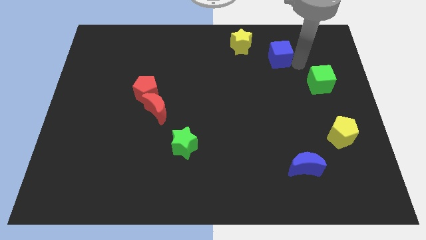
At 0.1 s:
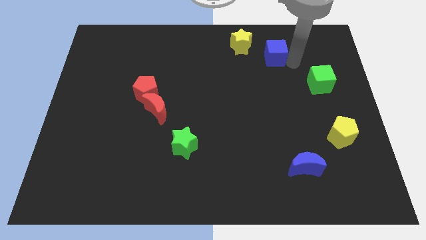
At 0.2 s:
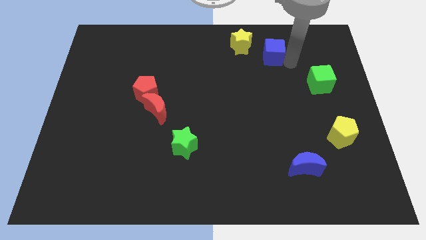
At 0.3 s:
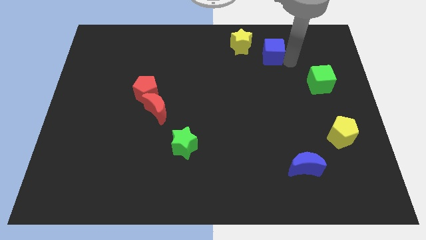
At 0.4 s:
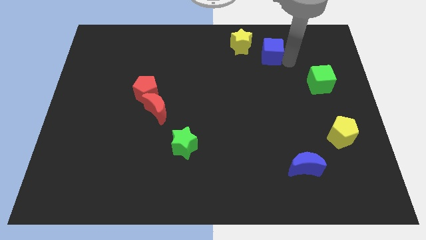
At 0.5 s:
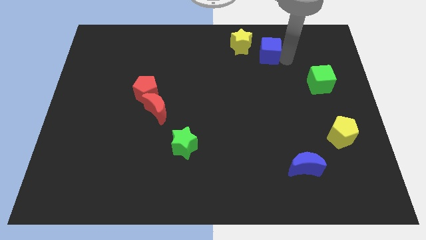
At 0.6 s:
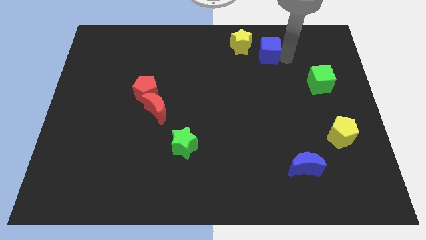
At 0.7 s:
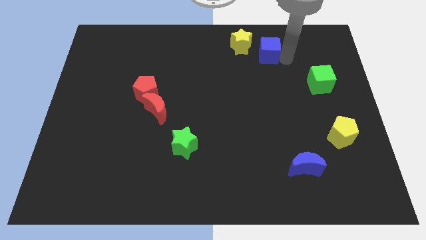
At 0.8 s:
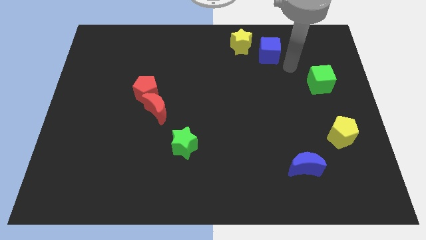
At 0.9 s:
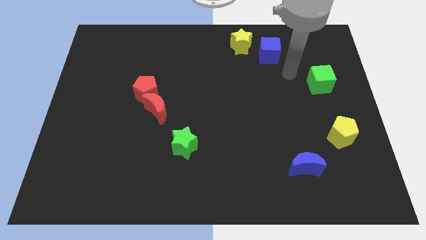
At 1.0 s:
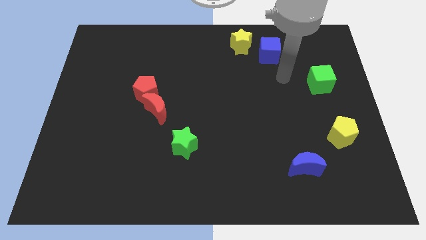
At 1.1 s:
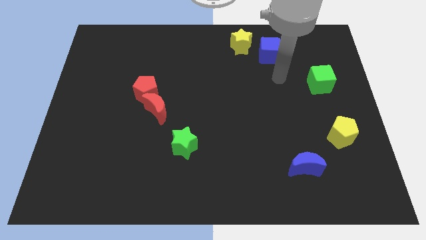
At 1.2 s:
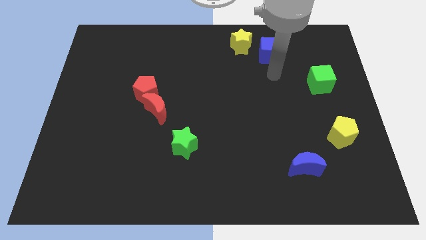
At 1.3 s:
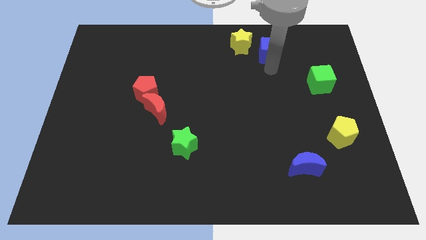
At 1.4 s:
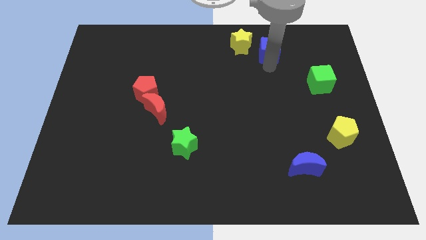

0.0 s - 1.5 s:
move the blue cube slightly to the left

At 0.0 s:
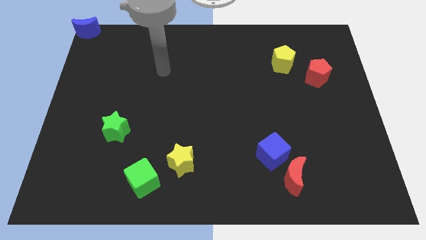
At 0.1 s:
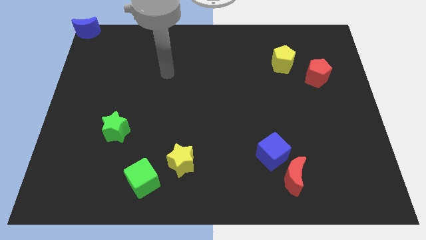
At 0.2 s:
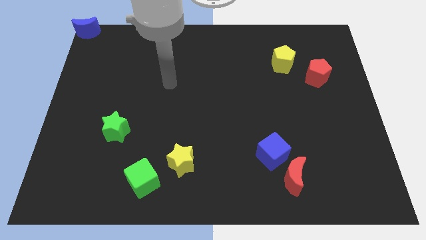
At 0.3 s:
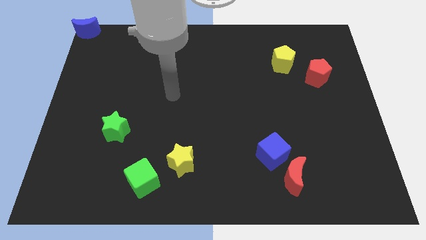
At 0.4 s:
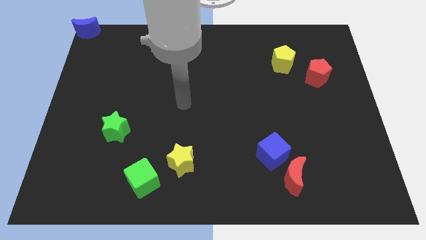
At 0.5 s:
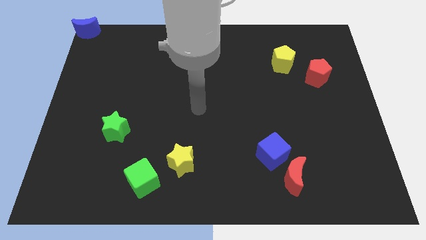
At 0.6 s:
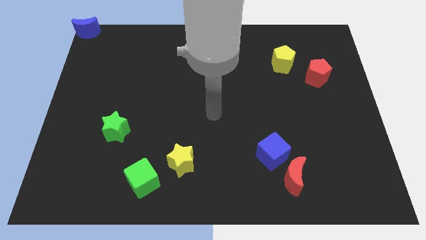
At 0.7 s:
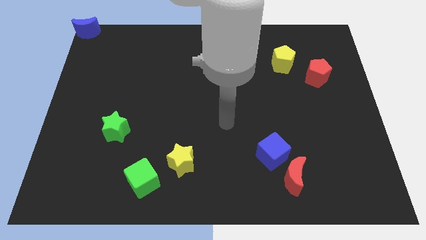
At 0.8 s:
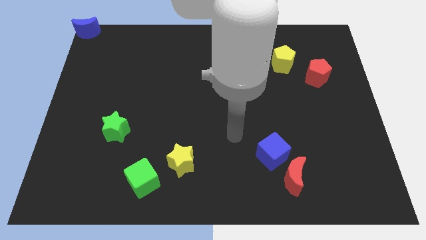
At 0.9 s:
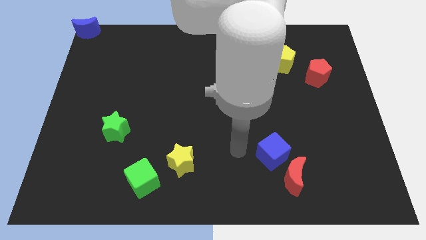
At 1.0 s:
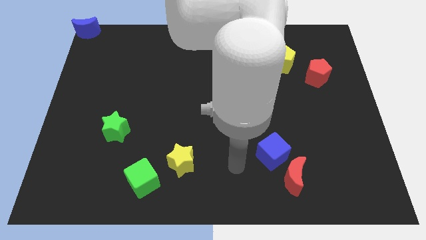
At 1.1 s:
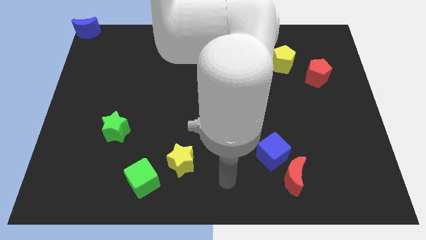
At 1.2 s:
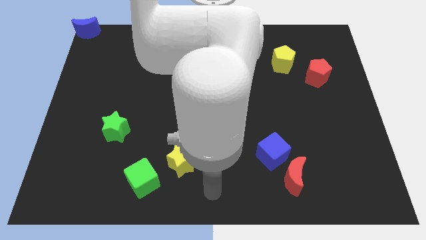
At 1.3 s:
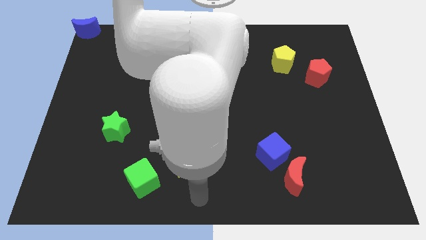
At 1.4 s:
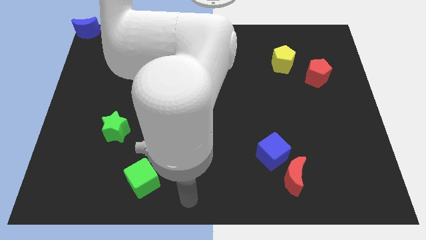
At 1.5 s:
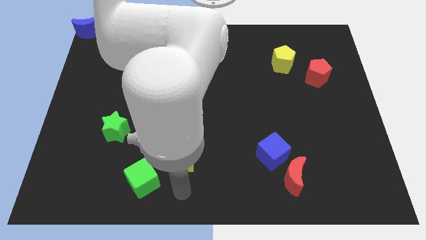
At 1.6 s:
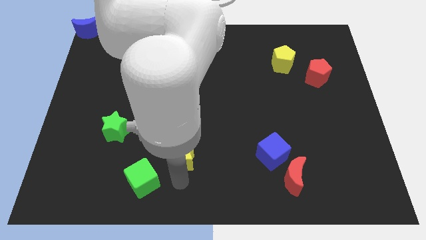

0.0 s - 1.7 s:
place your arm to the bottom side of the yellow star

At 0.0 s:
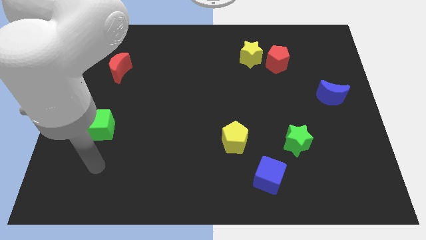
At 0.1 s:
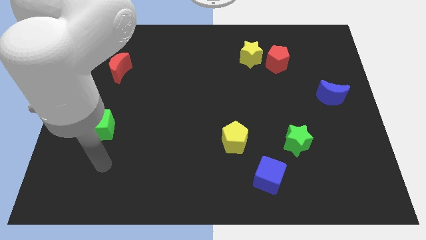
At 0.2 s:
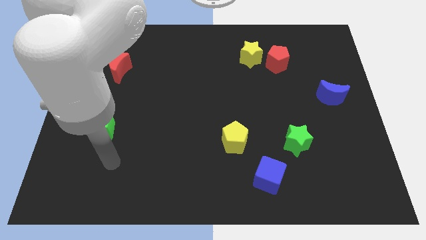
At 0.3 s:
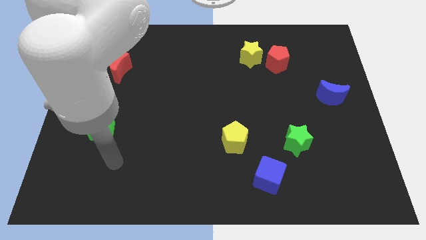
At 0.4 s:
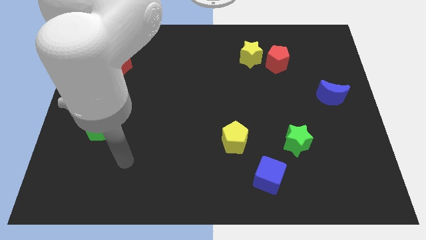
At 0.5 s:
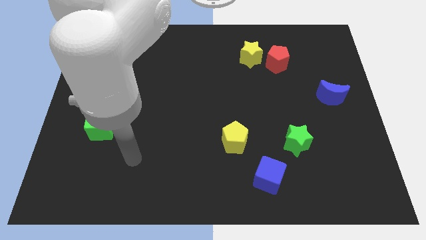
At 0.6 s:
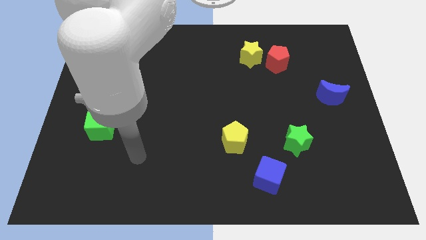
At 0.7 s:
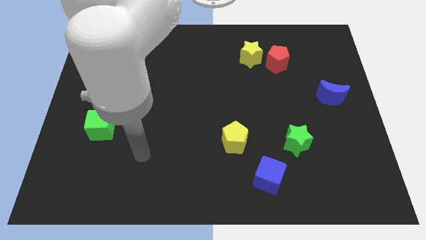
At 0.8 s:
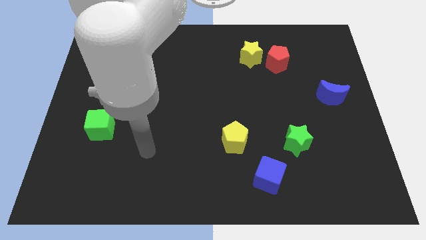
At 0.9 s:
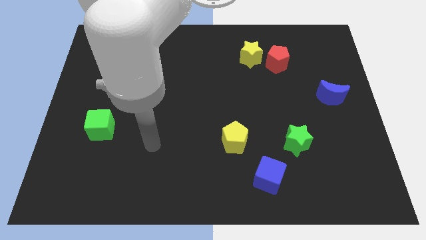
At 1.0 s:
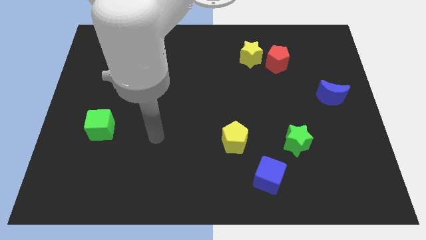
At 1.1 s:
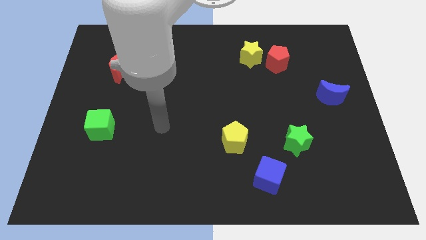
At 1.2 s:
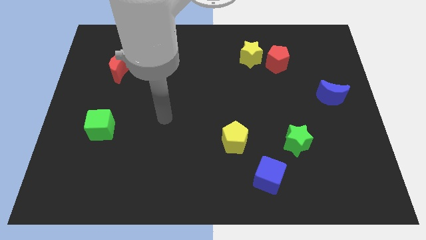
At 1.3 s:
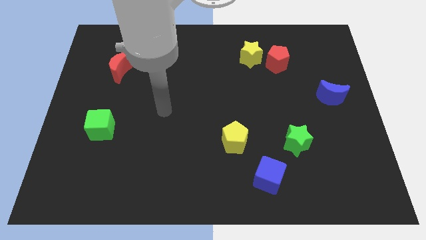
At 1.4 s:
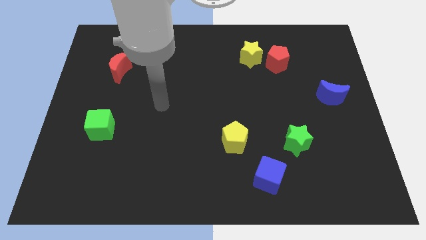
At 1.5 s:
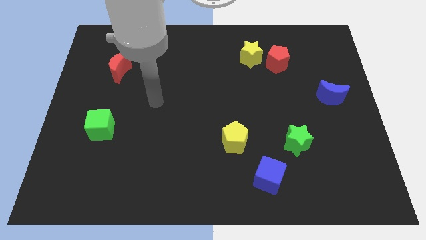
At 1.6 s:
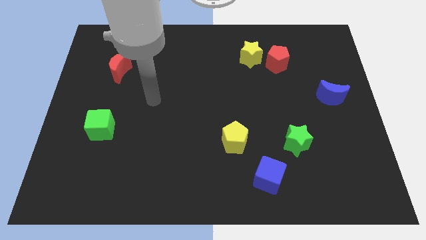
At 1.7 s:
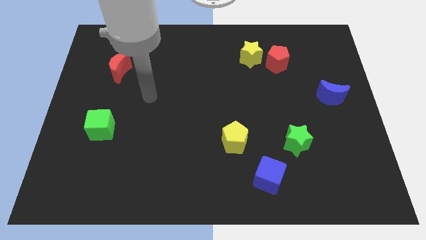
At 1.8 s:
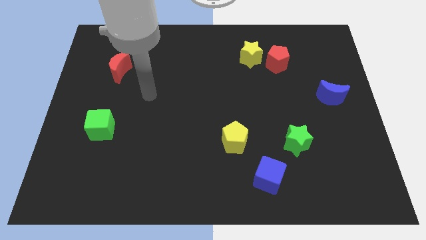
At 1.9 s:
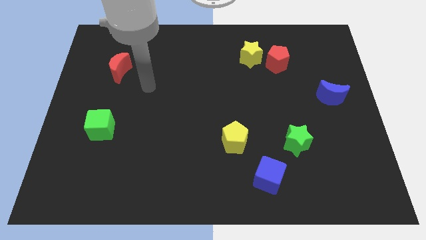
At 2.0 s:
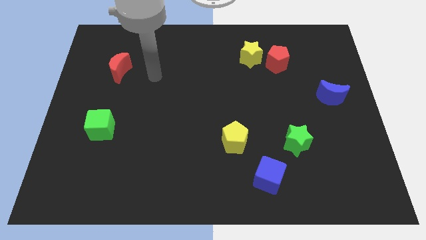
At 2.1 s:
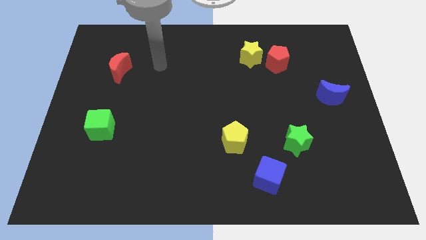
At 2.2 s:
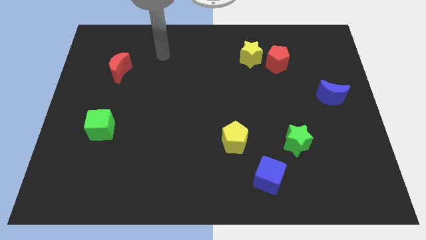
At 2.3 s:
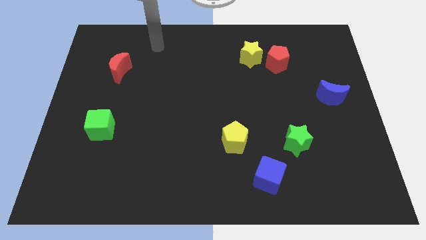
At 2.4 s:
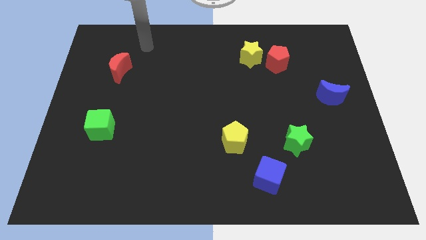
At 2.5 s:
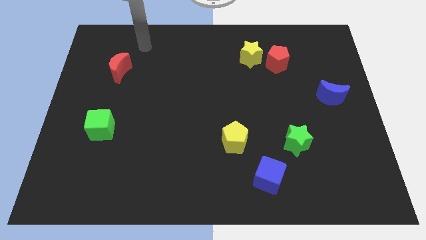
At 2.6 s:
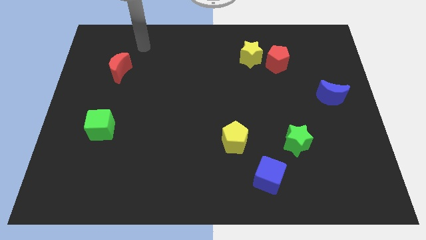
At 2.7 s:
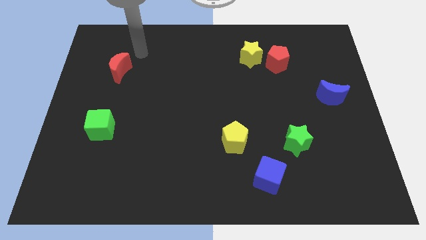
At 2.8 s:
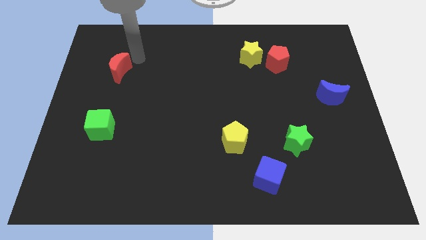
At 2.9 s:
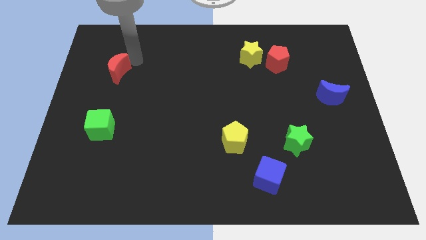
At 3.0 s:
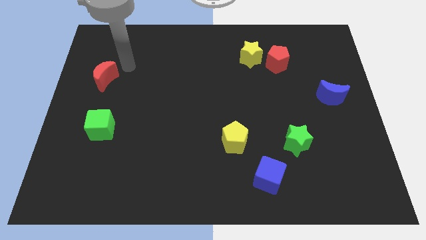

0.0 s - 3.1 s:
push the red crescent slightly towards the green cube

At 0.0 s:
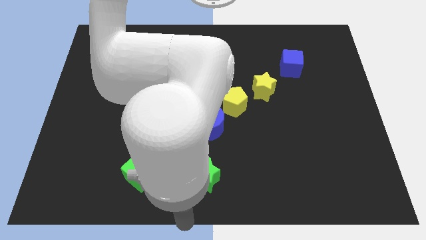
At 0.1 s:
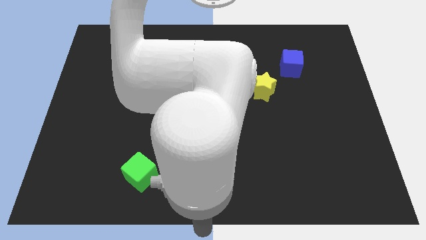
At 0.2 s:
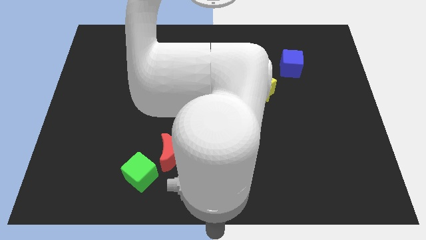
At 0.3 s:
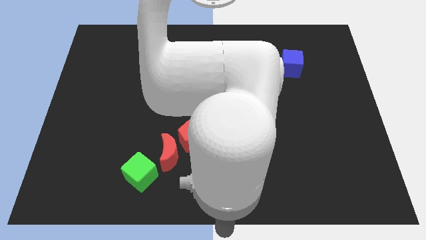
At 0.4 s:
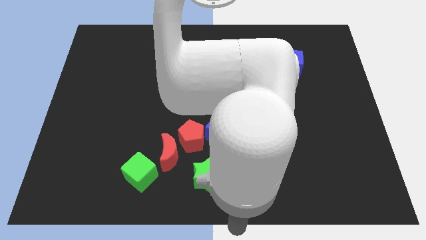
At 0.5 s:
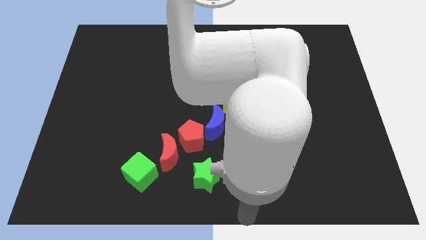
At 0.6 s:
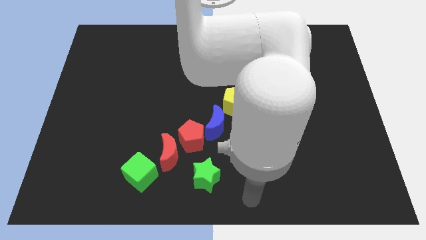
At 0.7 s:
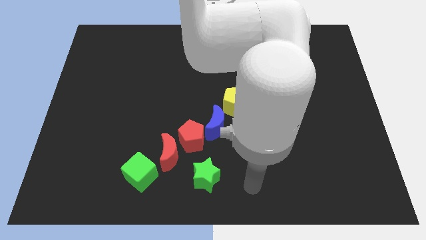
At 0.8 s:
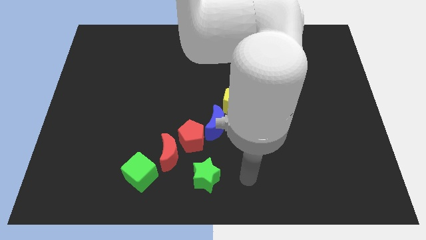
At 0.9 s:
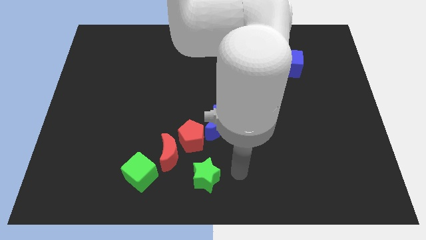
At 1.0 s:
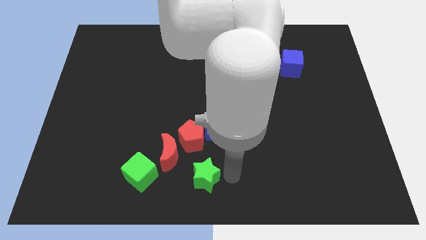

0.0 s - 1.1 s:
move arm towards green star

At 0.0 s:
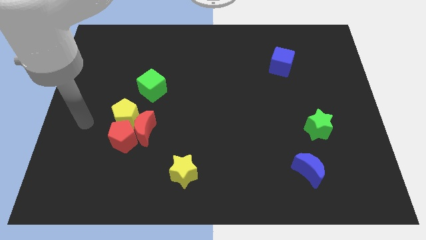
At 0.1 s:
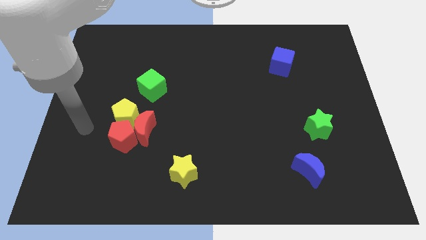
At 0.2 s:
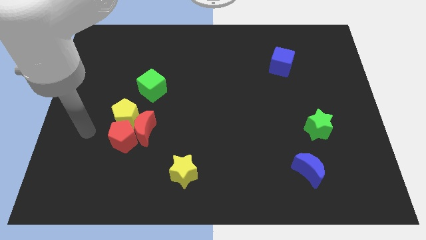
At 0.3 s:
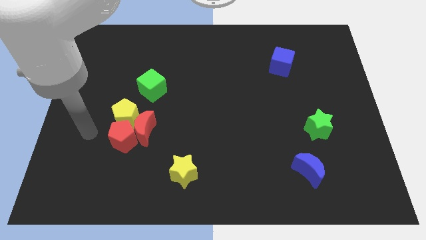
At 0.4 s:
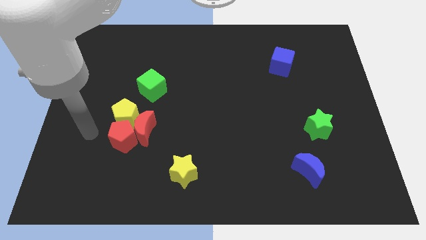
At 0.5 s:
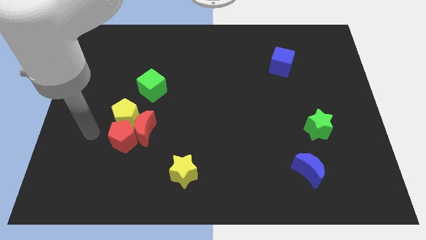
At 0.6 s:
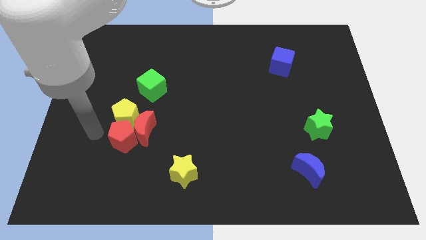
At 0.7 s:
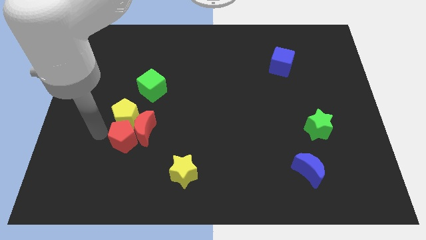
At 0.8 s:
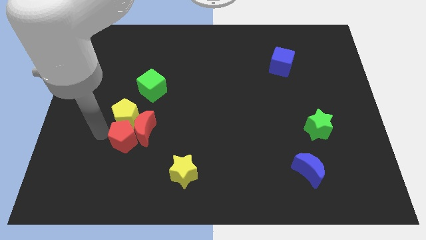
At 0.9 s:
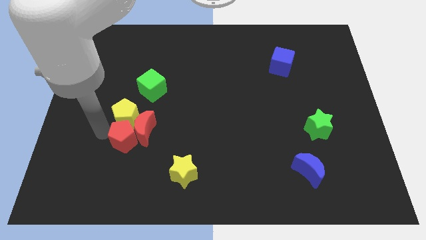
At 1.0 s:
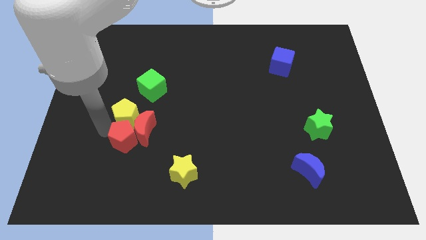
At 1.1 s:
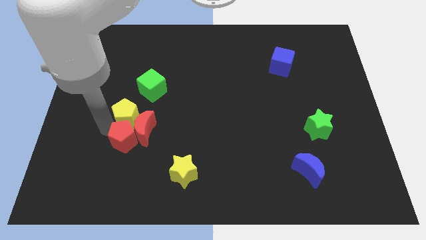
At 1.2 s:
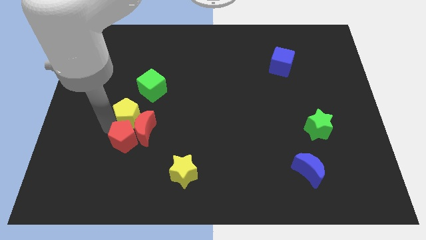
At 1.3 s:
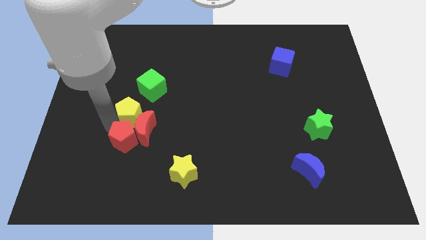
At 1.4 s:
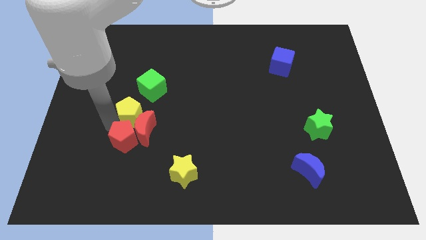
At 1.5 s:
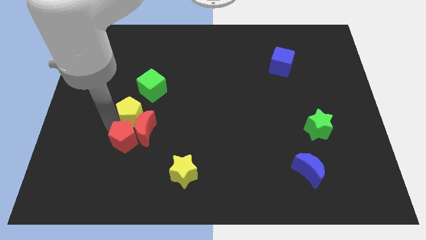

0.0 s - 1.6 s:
place the yellow pentagon above the red pentagon
